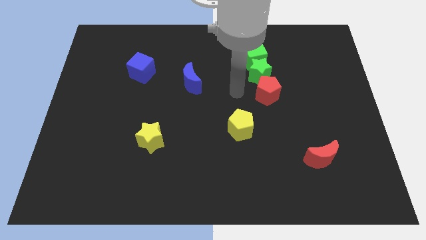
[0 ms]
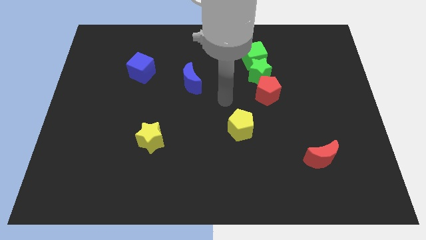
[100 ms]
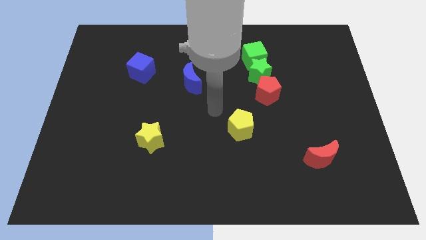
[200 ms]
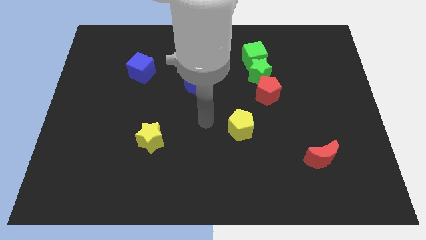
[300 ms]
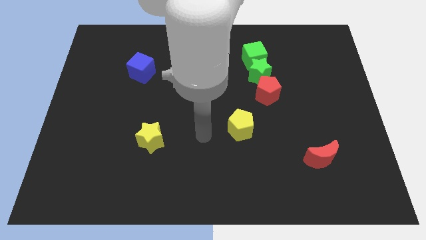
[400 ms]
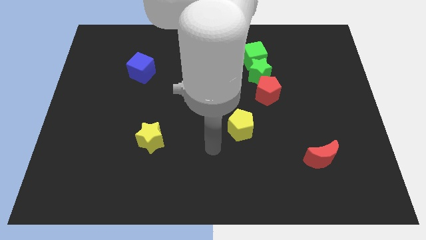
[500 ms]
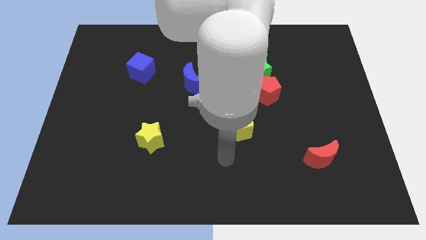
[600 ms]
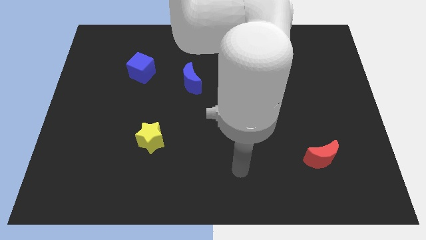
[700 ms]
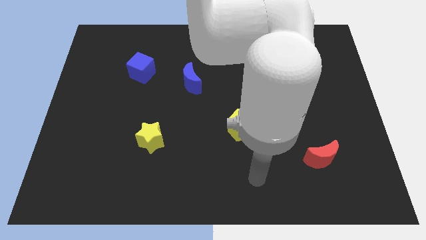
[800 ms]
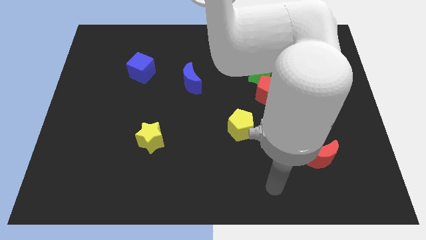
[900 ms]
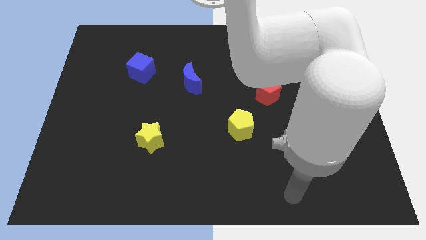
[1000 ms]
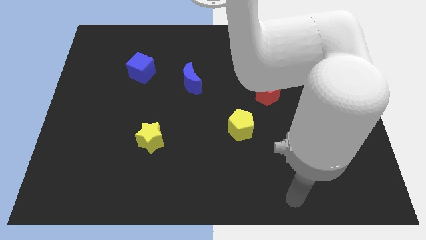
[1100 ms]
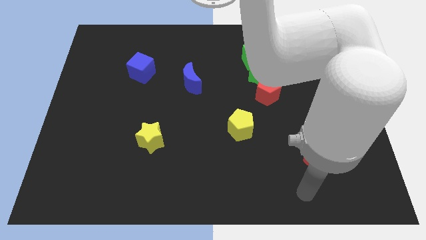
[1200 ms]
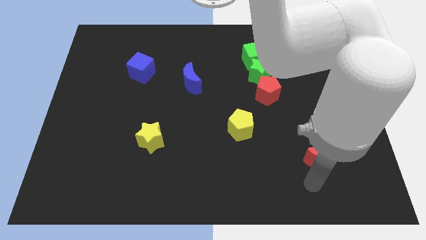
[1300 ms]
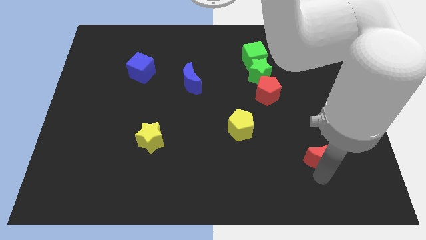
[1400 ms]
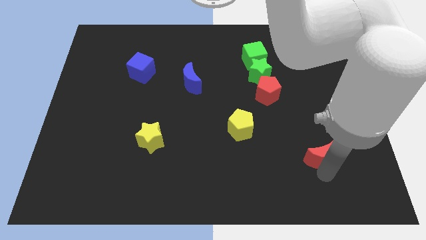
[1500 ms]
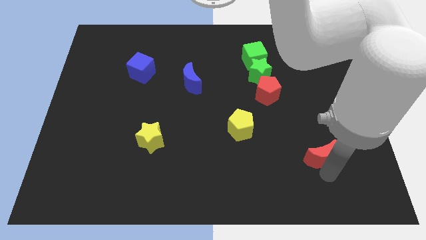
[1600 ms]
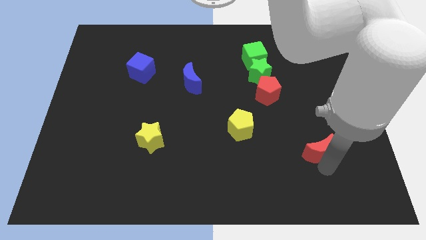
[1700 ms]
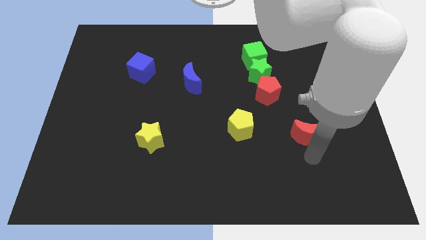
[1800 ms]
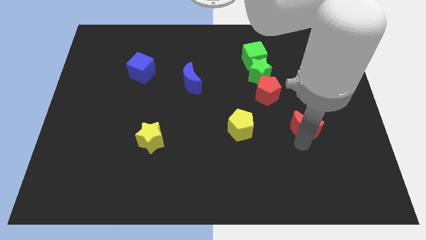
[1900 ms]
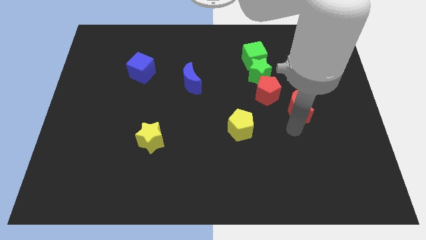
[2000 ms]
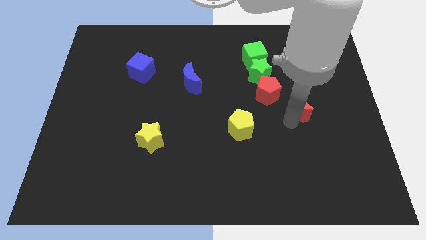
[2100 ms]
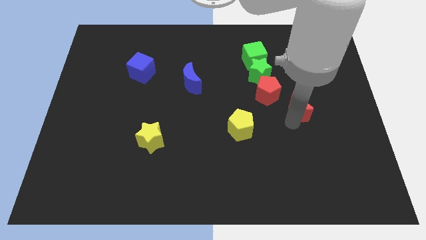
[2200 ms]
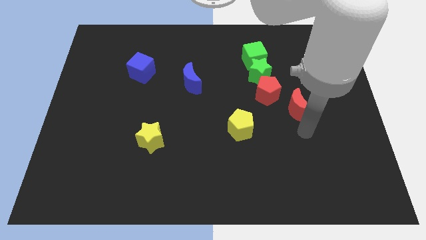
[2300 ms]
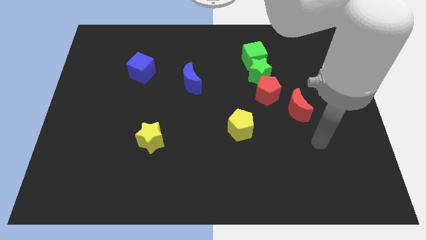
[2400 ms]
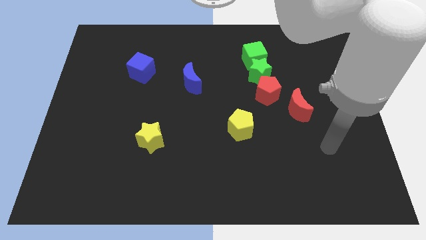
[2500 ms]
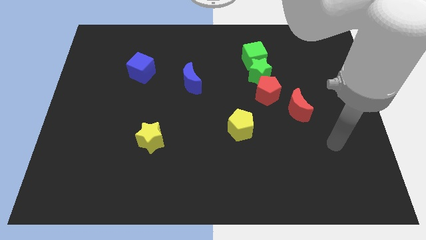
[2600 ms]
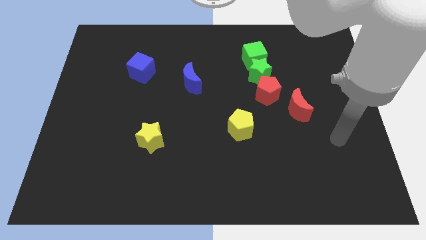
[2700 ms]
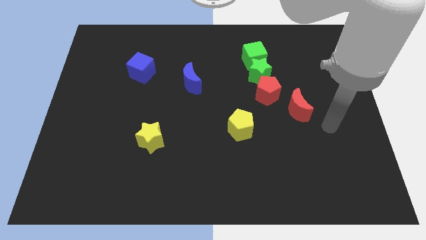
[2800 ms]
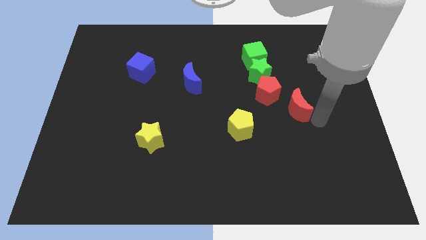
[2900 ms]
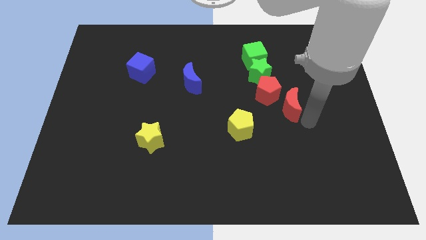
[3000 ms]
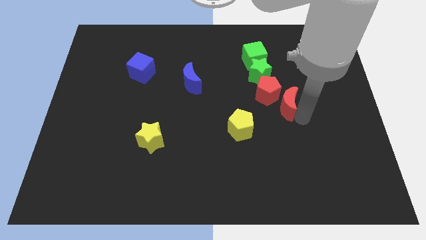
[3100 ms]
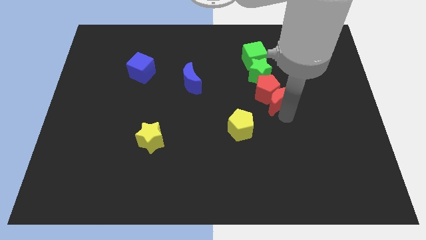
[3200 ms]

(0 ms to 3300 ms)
place the red crescent to the right bottom of the red pentagon

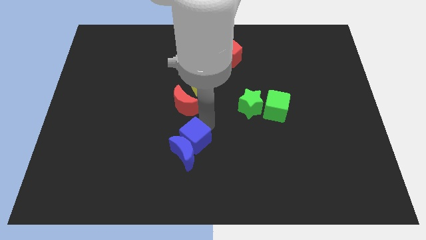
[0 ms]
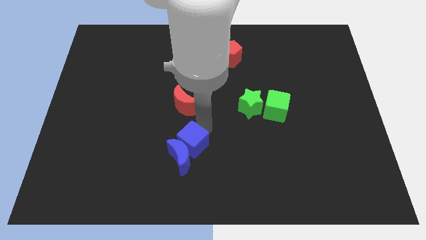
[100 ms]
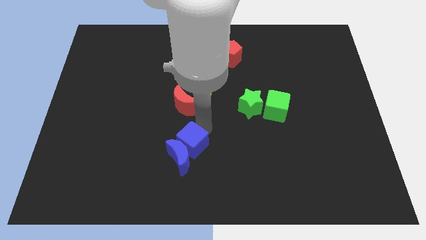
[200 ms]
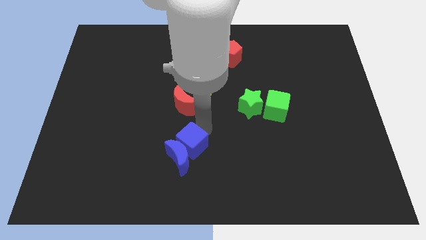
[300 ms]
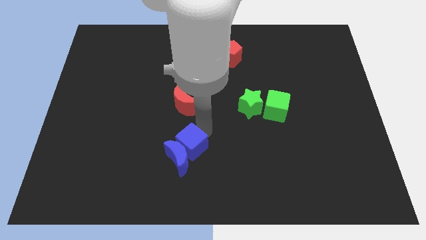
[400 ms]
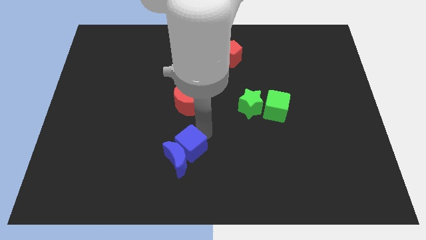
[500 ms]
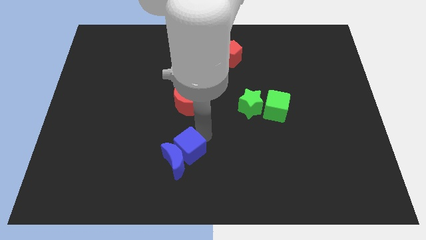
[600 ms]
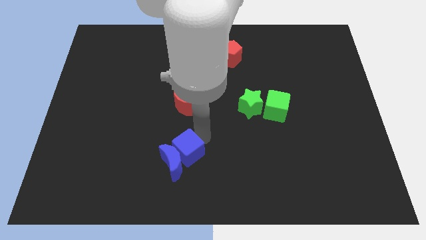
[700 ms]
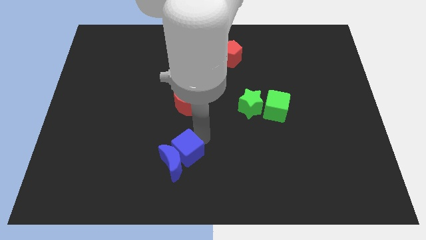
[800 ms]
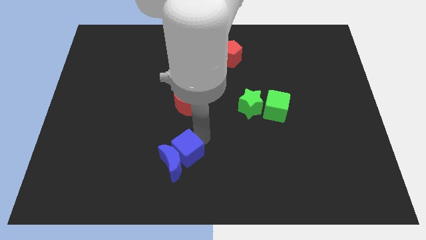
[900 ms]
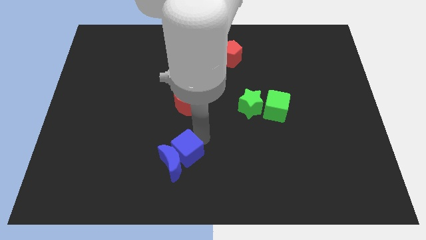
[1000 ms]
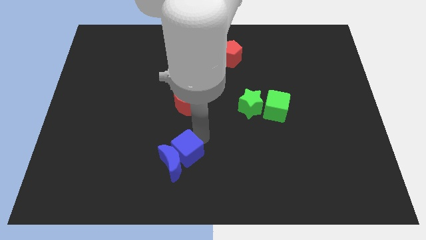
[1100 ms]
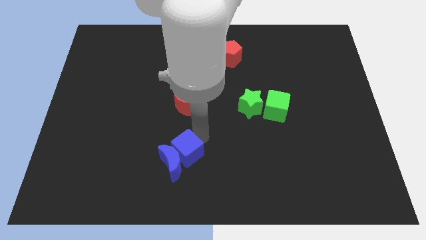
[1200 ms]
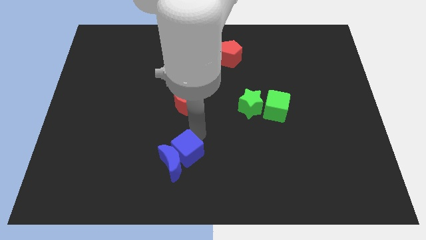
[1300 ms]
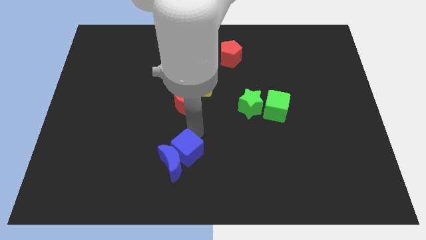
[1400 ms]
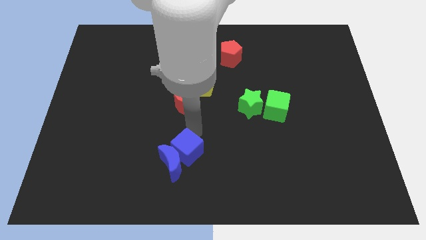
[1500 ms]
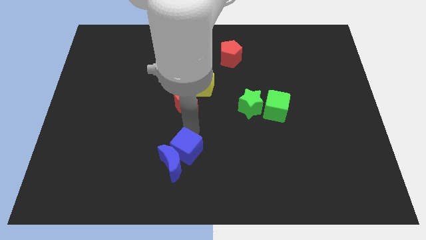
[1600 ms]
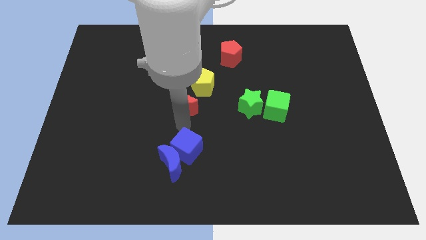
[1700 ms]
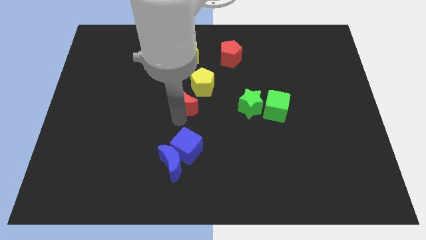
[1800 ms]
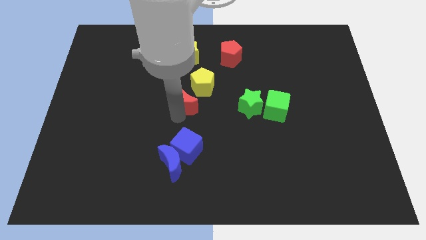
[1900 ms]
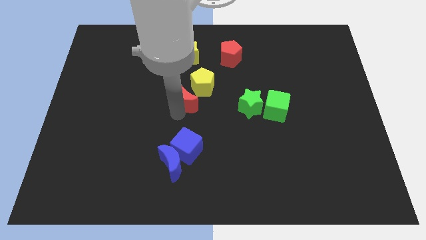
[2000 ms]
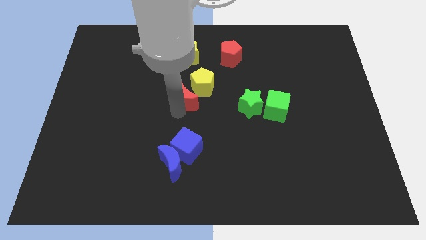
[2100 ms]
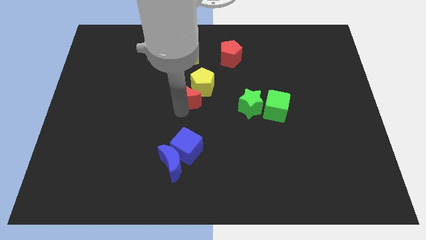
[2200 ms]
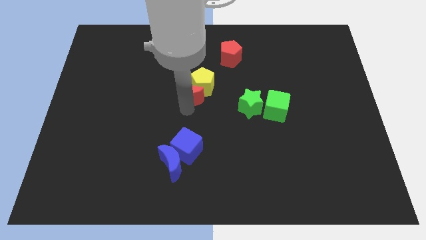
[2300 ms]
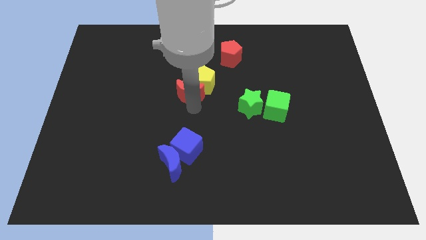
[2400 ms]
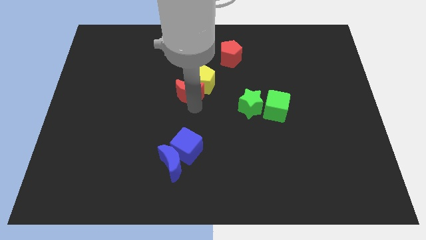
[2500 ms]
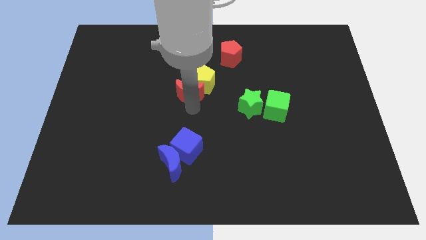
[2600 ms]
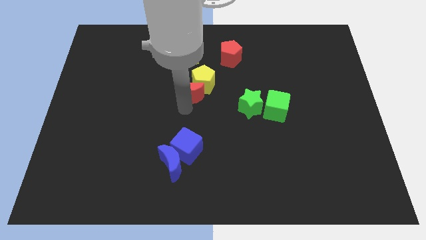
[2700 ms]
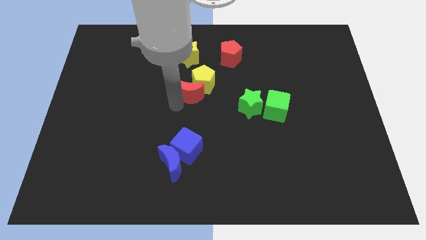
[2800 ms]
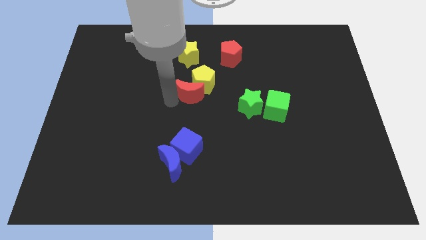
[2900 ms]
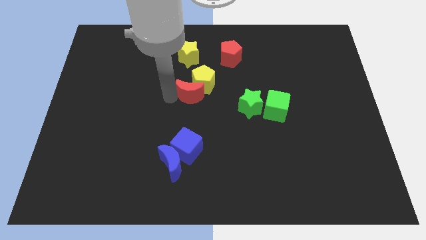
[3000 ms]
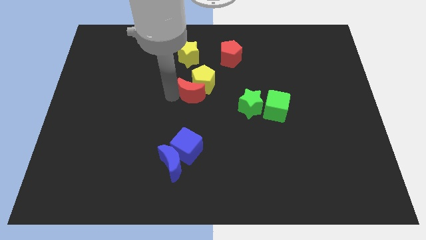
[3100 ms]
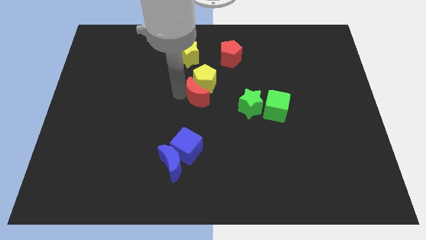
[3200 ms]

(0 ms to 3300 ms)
put the red moon into the yellow pentagon

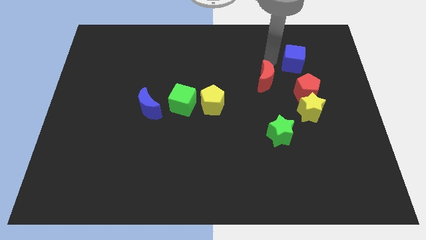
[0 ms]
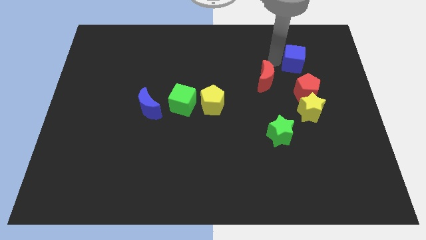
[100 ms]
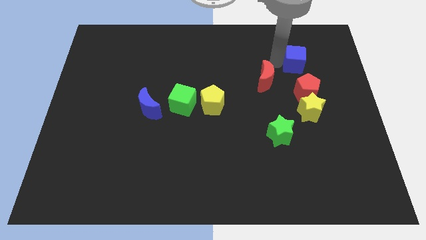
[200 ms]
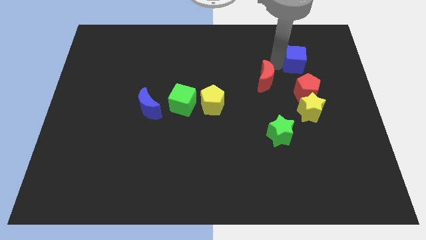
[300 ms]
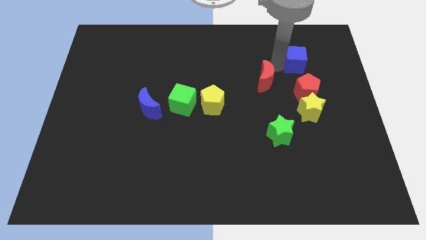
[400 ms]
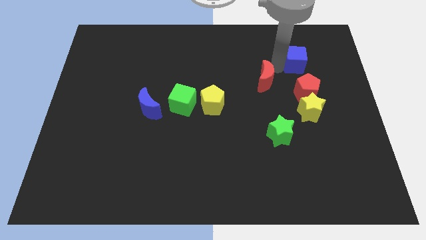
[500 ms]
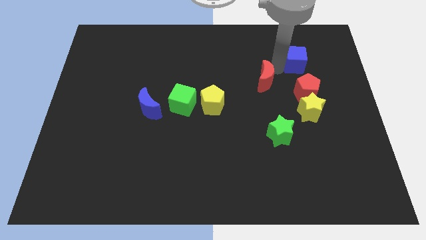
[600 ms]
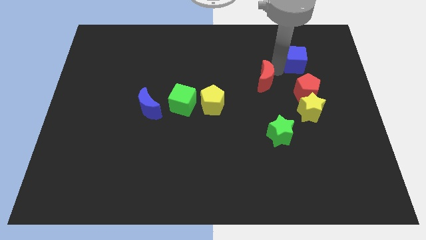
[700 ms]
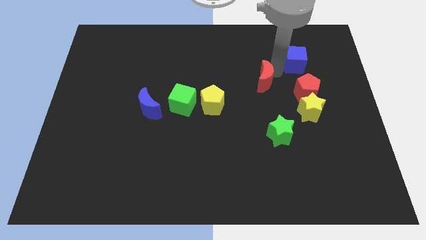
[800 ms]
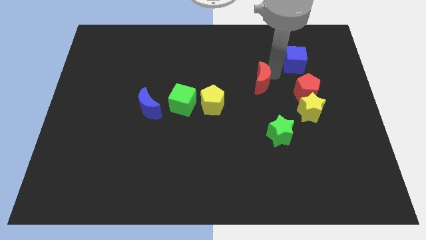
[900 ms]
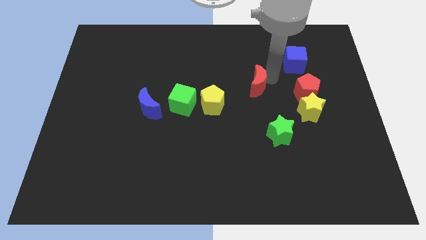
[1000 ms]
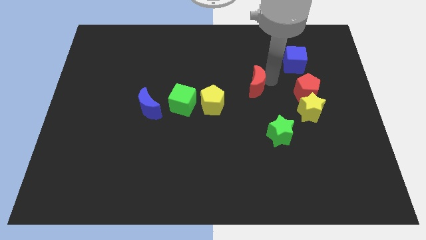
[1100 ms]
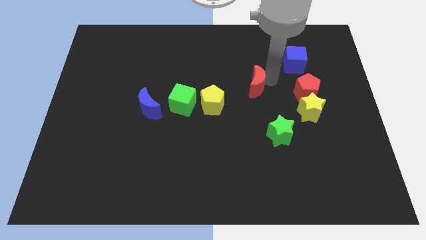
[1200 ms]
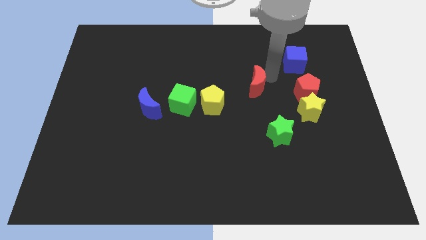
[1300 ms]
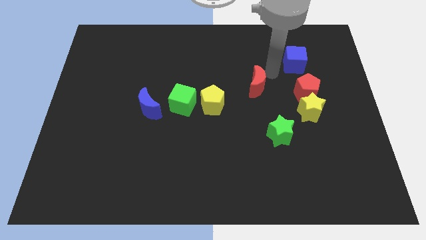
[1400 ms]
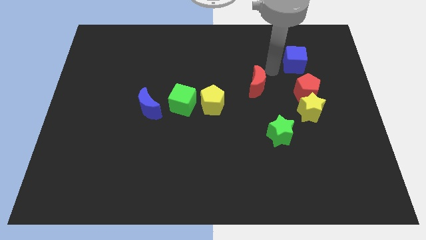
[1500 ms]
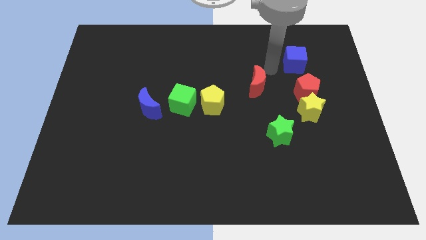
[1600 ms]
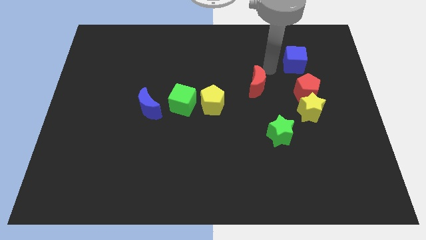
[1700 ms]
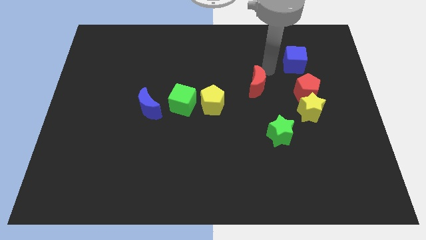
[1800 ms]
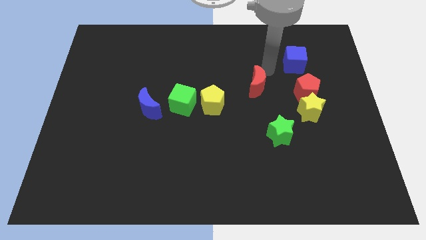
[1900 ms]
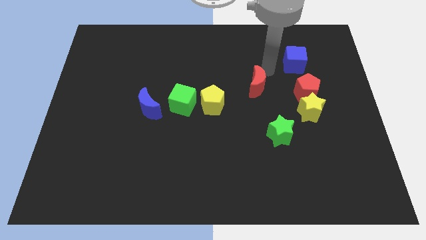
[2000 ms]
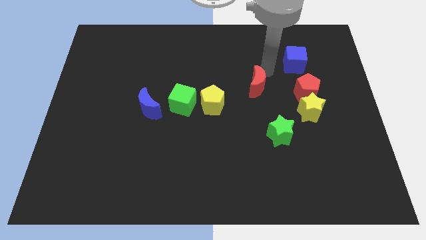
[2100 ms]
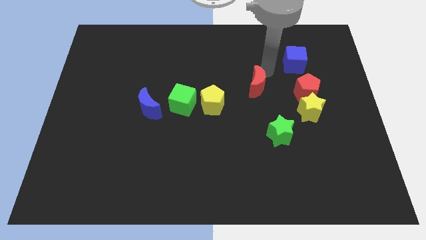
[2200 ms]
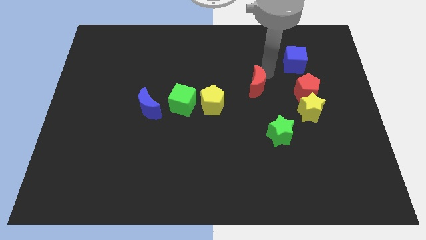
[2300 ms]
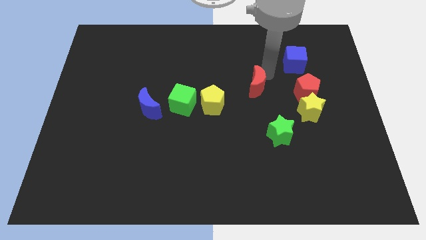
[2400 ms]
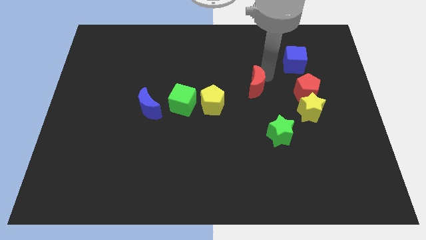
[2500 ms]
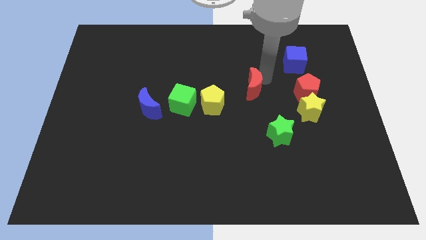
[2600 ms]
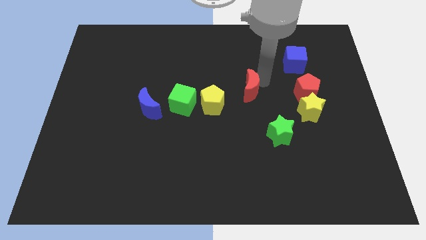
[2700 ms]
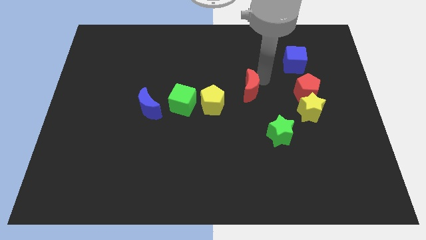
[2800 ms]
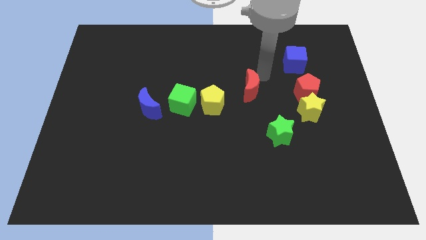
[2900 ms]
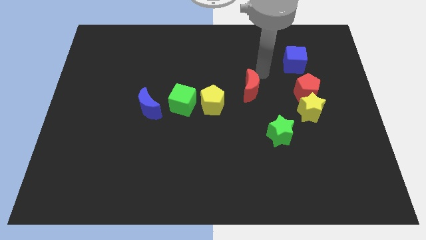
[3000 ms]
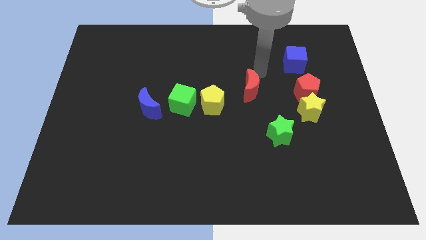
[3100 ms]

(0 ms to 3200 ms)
put the red moon parallel to red pentagon
